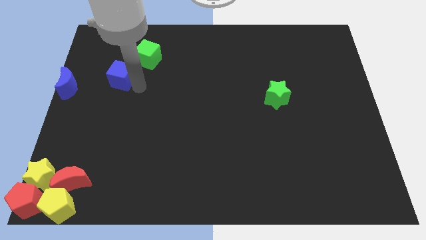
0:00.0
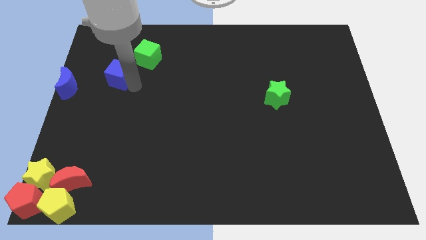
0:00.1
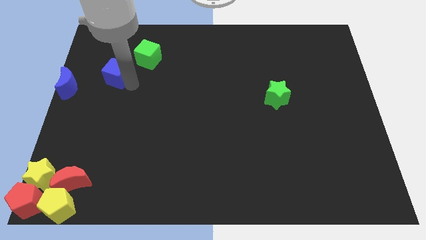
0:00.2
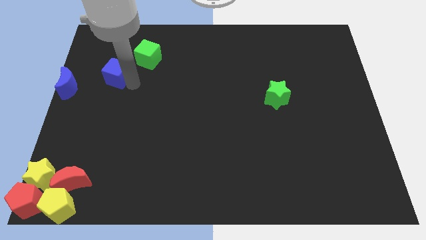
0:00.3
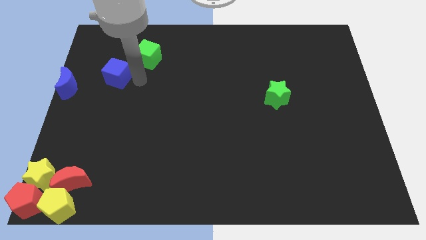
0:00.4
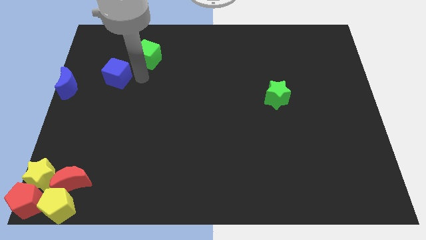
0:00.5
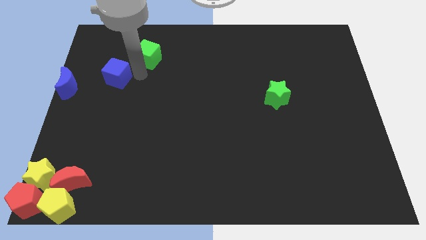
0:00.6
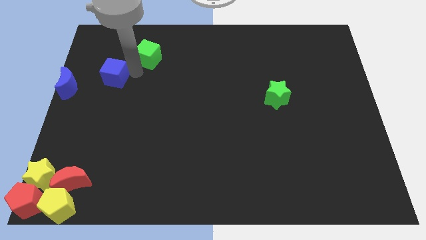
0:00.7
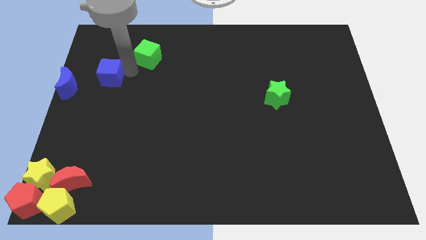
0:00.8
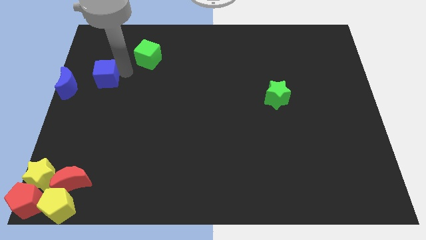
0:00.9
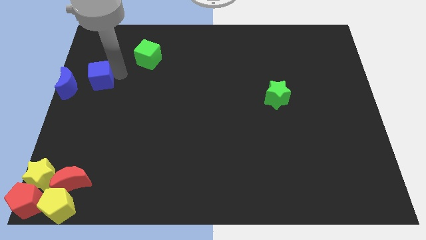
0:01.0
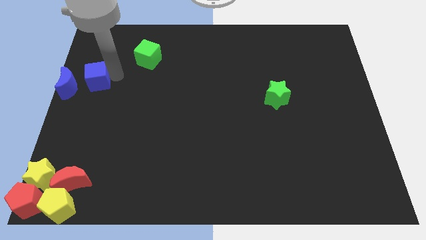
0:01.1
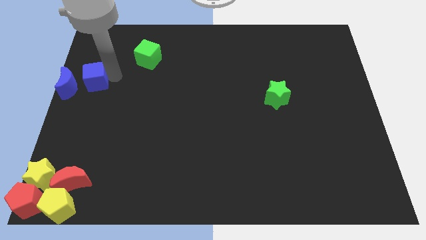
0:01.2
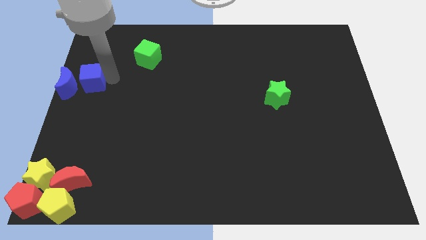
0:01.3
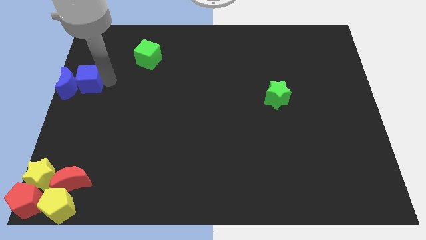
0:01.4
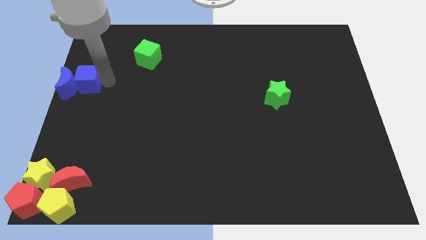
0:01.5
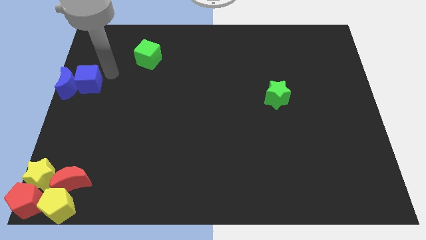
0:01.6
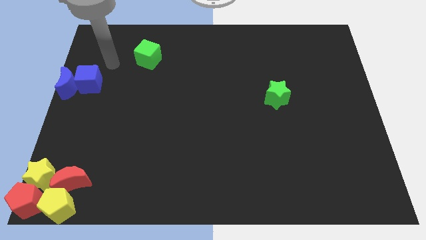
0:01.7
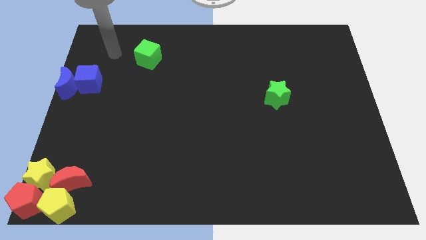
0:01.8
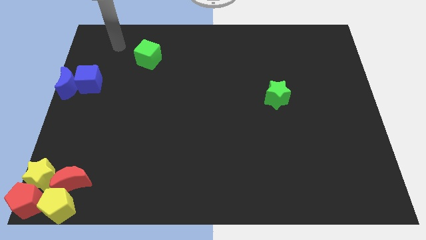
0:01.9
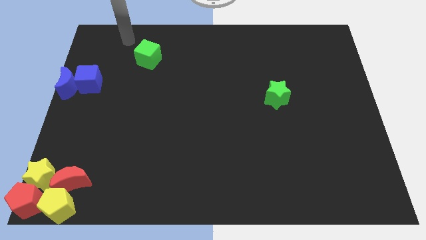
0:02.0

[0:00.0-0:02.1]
push blue cube into blue moon

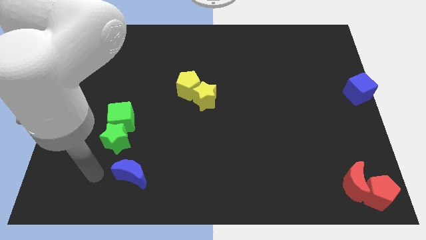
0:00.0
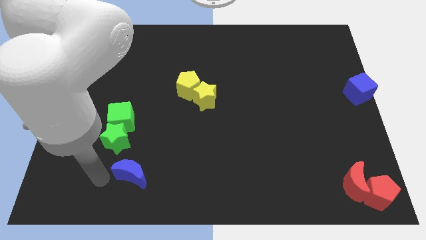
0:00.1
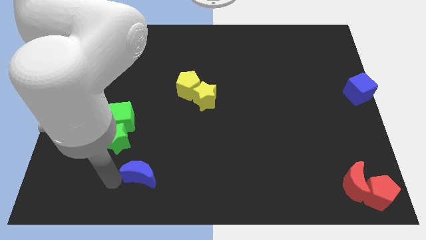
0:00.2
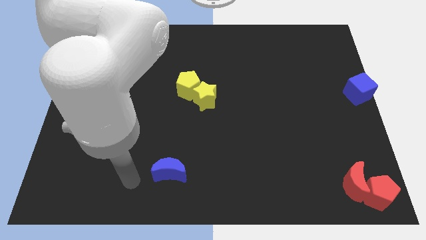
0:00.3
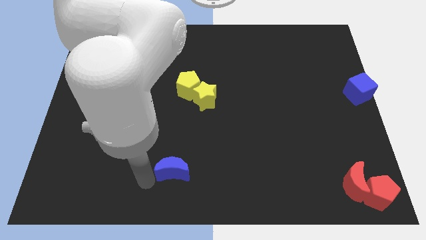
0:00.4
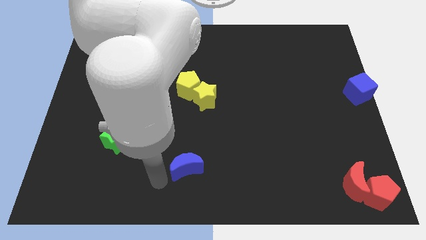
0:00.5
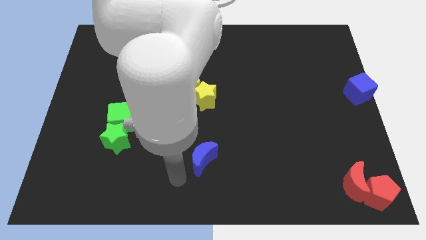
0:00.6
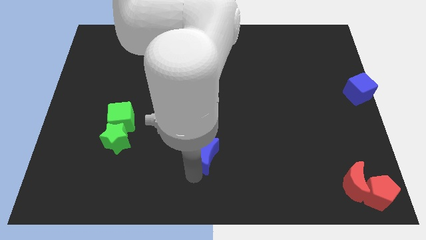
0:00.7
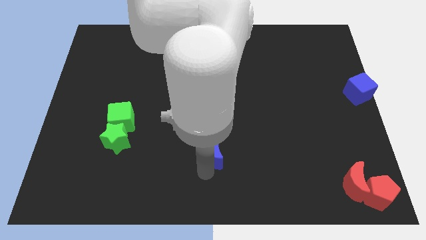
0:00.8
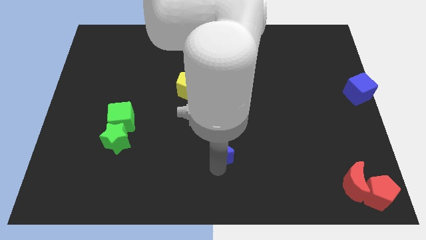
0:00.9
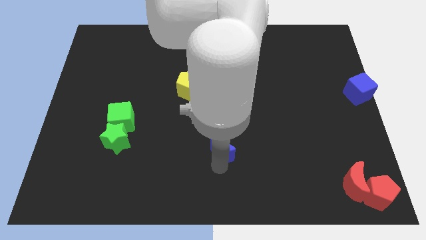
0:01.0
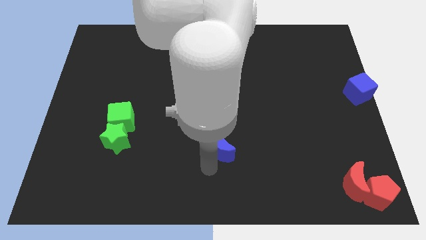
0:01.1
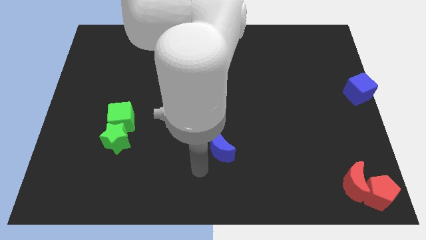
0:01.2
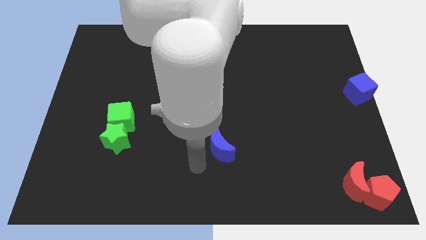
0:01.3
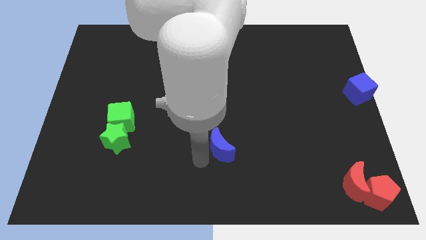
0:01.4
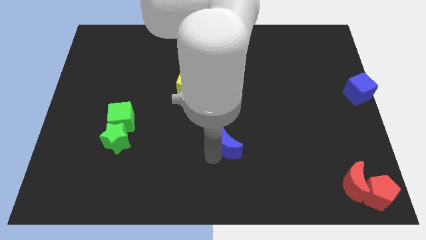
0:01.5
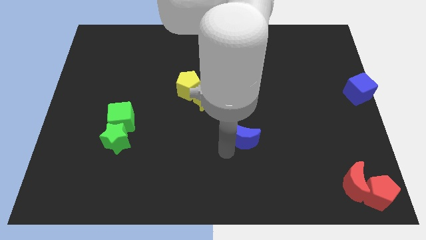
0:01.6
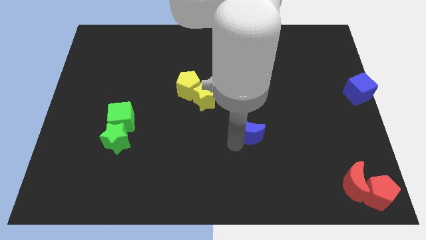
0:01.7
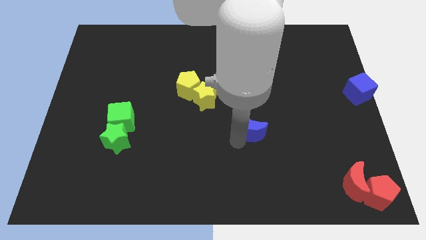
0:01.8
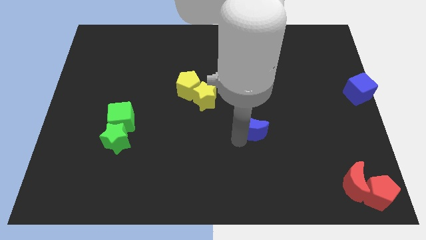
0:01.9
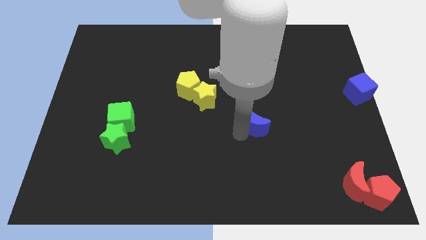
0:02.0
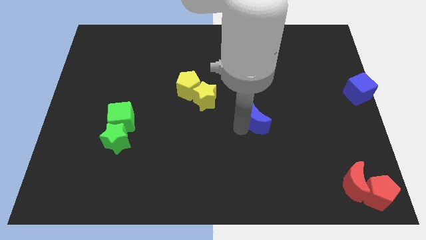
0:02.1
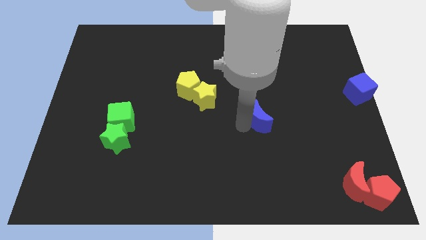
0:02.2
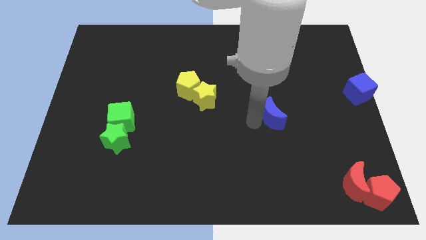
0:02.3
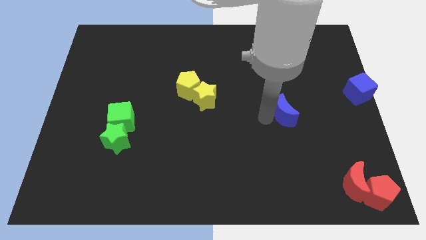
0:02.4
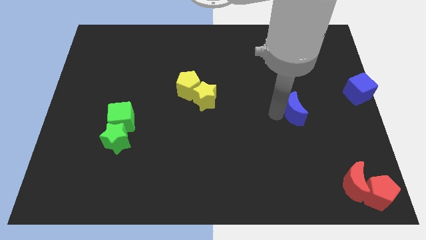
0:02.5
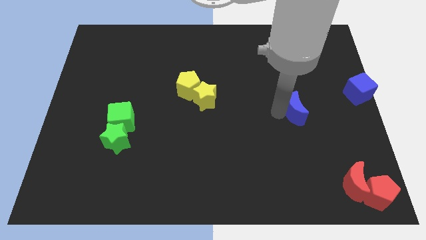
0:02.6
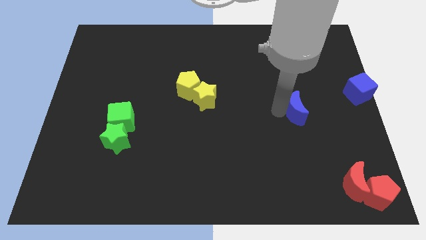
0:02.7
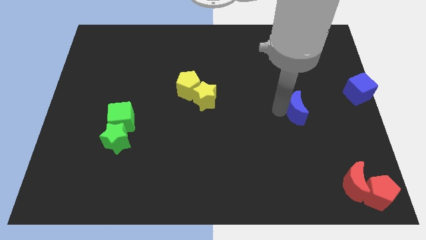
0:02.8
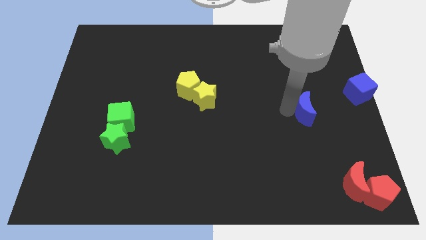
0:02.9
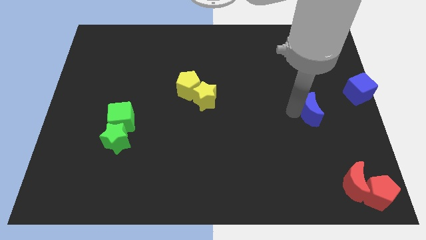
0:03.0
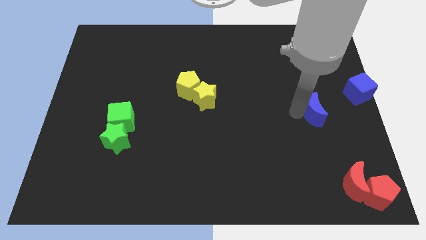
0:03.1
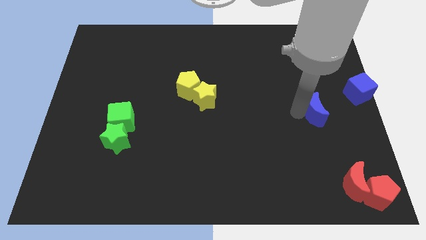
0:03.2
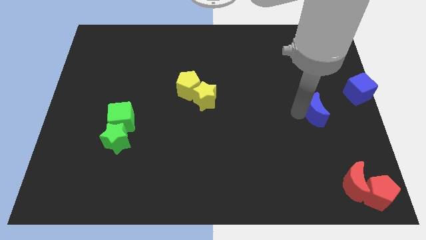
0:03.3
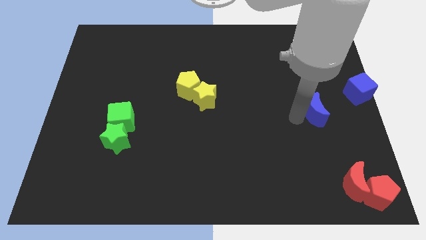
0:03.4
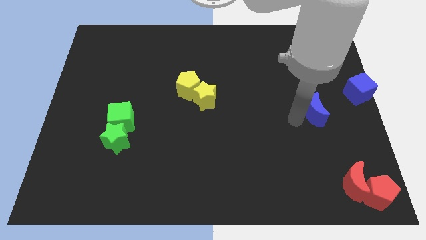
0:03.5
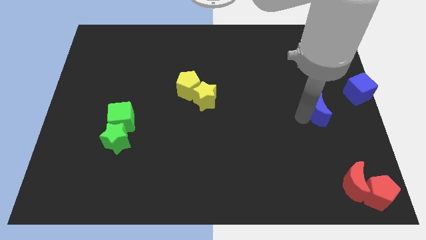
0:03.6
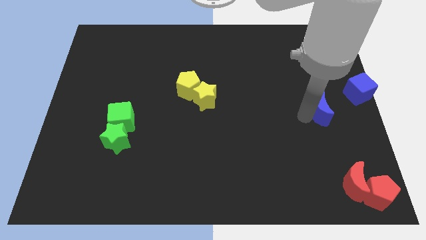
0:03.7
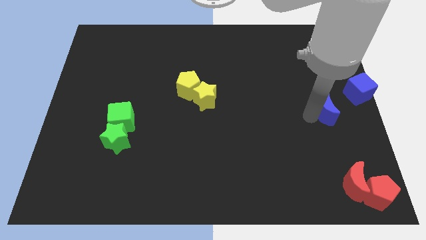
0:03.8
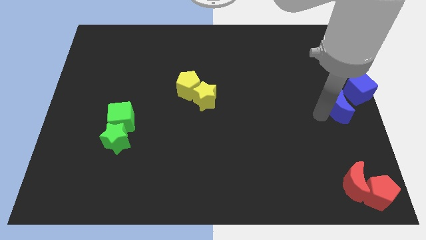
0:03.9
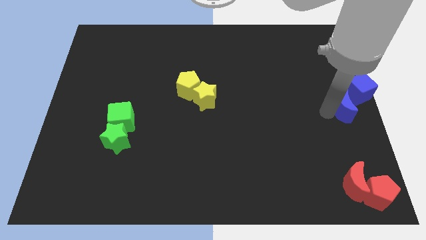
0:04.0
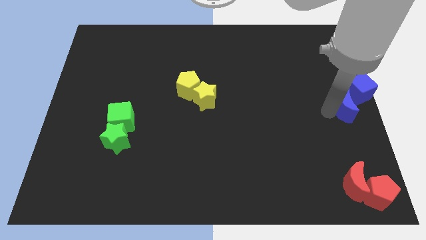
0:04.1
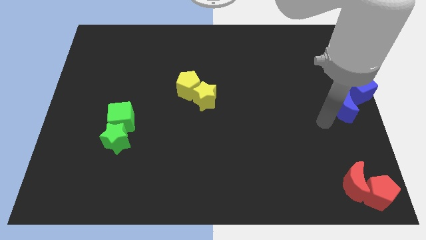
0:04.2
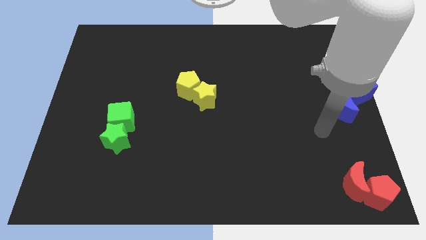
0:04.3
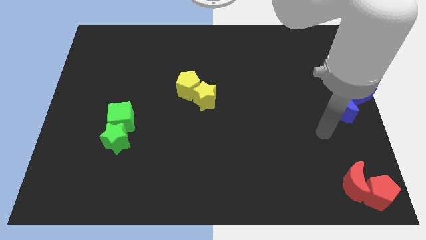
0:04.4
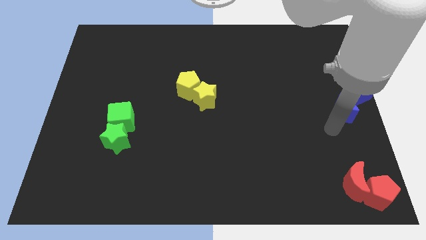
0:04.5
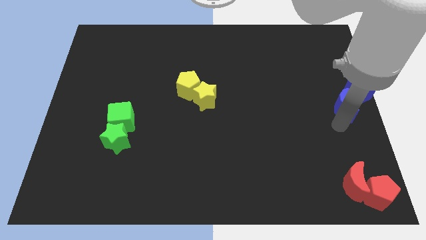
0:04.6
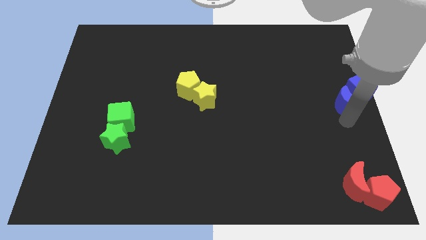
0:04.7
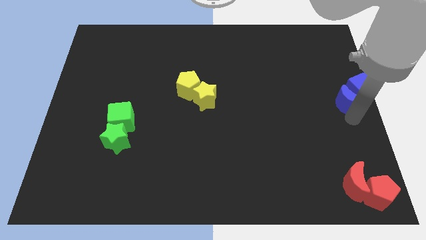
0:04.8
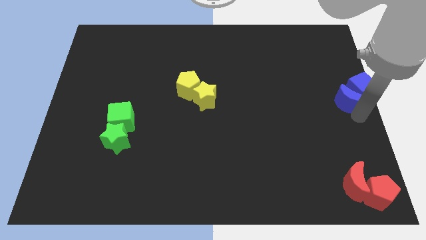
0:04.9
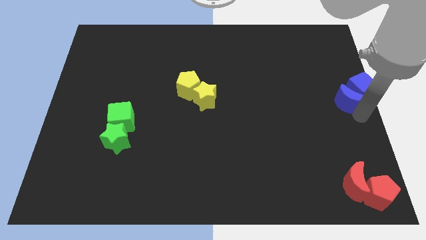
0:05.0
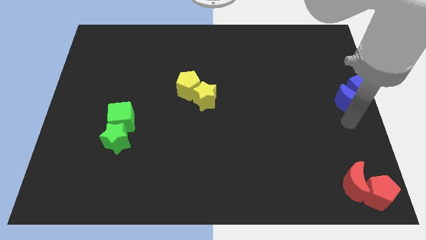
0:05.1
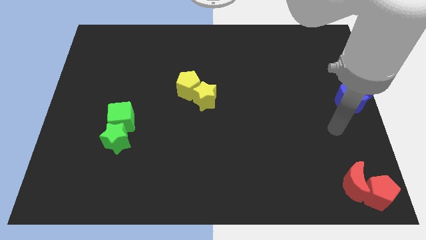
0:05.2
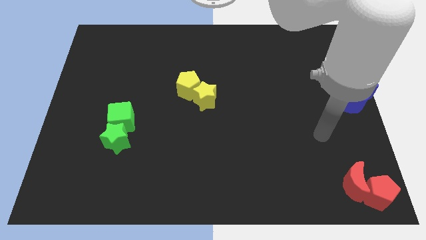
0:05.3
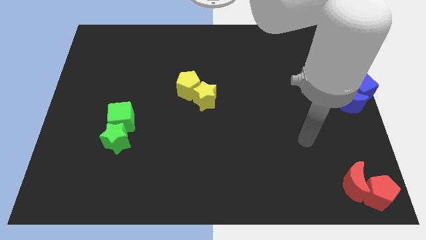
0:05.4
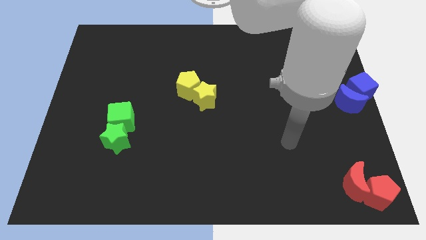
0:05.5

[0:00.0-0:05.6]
push the blue crescent into the blue cube

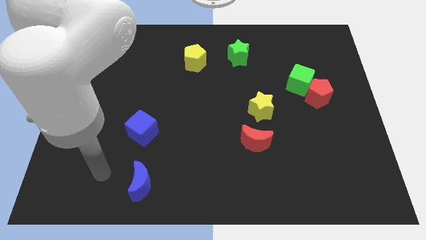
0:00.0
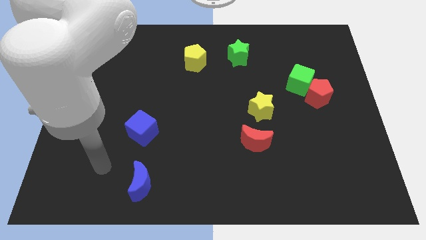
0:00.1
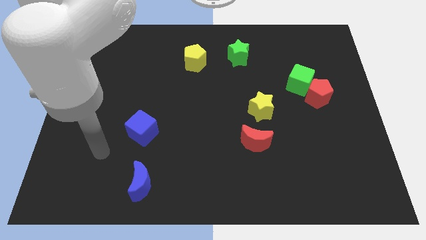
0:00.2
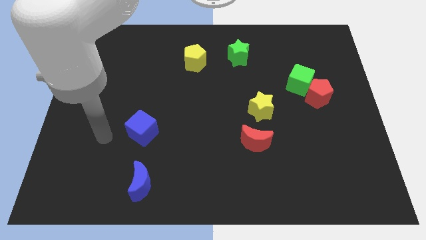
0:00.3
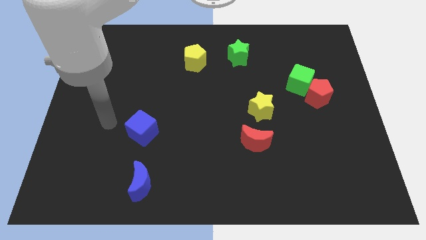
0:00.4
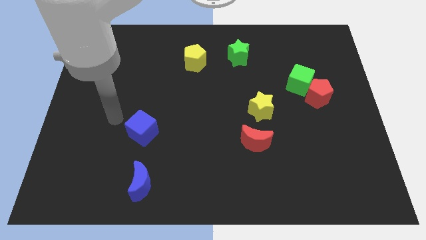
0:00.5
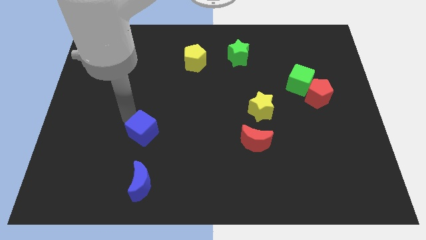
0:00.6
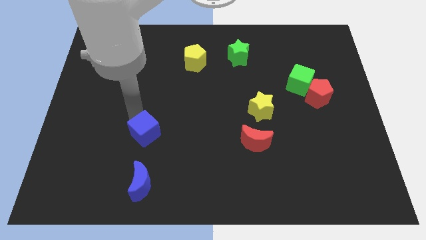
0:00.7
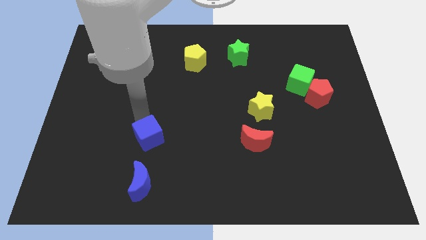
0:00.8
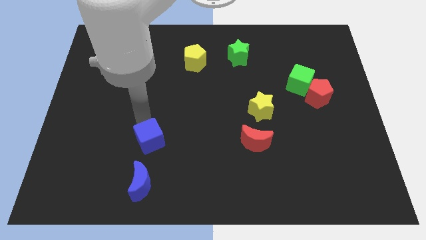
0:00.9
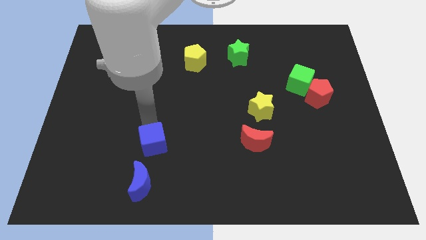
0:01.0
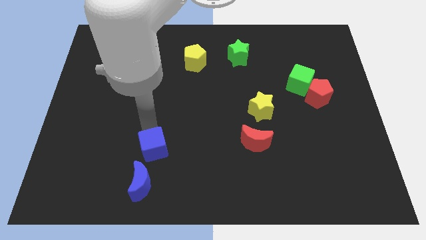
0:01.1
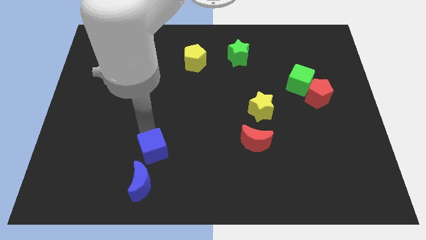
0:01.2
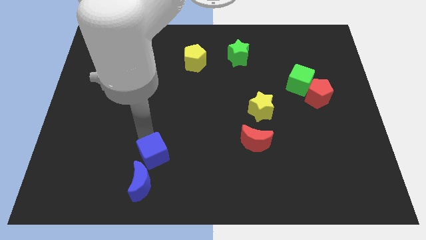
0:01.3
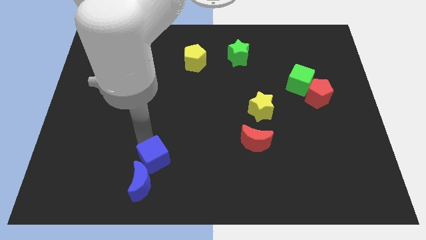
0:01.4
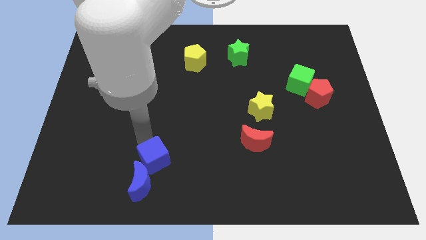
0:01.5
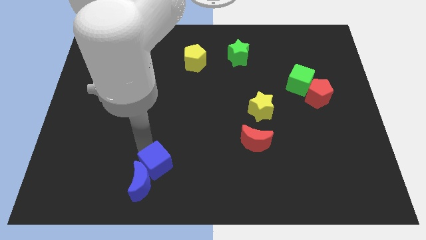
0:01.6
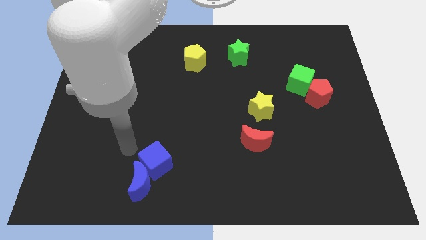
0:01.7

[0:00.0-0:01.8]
slide the blue cube diagonally top right to the blue moon
